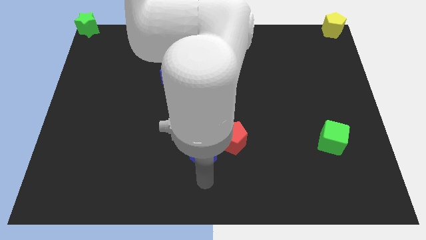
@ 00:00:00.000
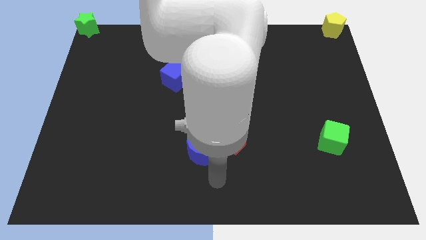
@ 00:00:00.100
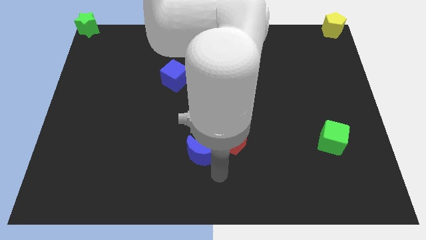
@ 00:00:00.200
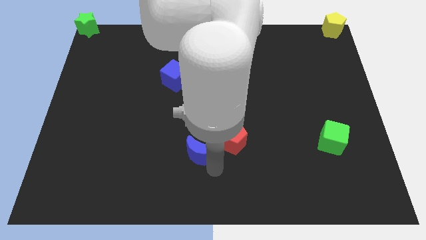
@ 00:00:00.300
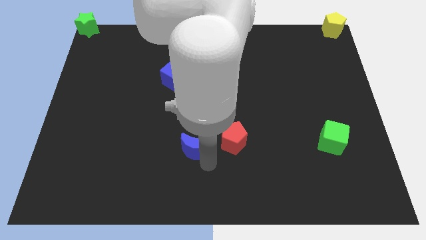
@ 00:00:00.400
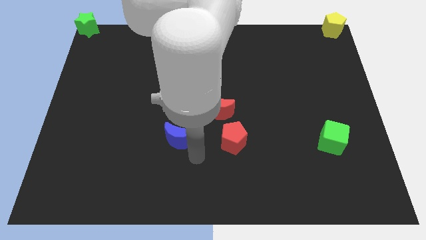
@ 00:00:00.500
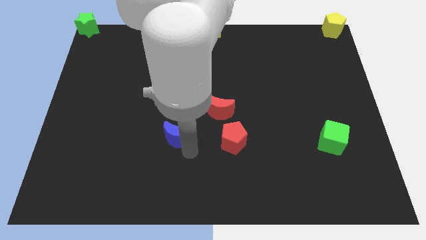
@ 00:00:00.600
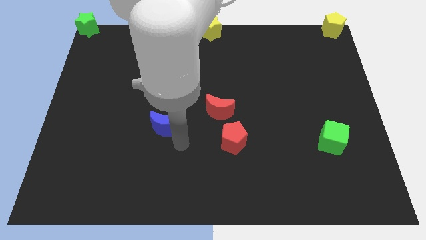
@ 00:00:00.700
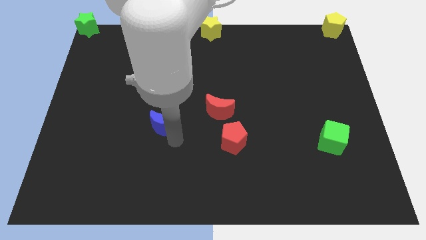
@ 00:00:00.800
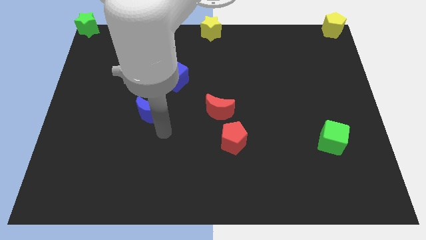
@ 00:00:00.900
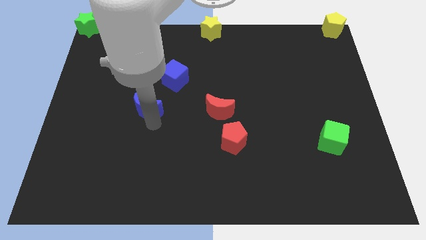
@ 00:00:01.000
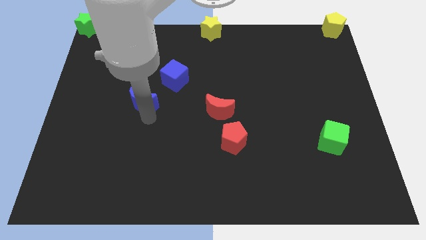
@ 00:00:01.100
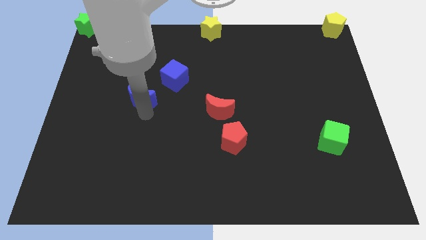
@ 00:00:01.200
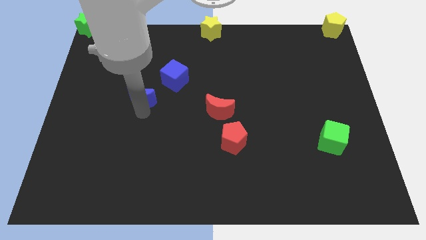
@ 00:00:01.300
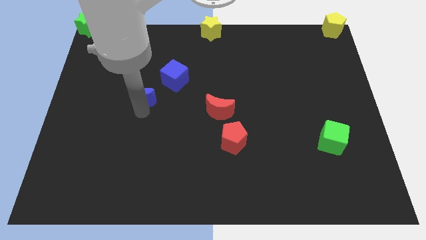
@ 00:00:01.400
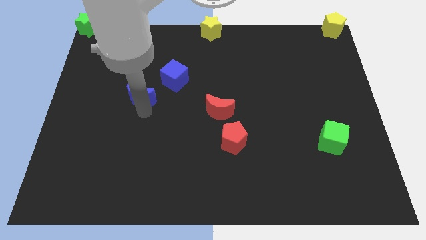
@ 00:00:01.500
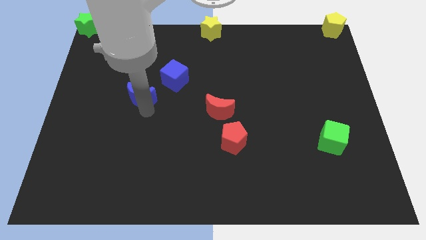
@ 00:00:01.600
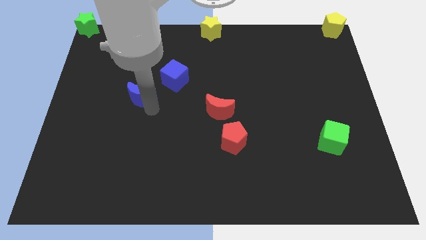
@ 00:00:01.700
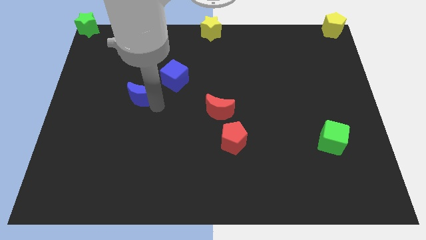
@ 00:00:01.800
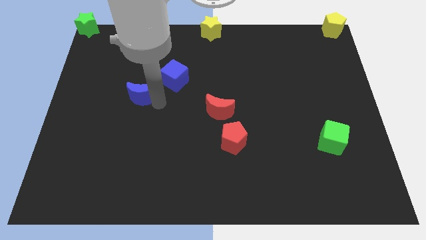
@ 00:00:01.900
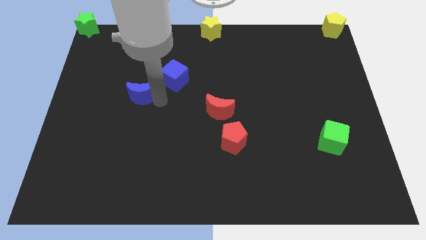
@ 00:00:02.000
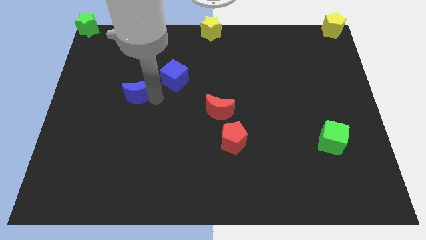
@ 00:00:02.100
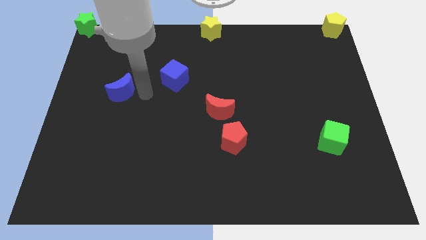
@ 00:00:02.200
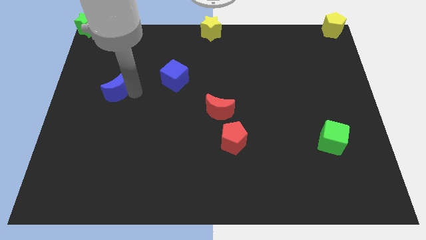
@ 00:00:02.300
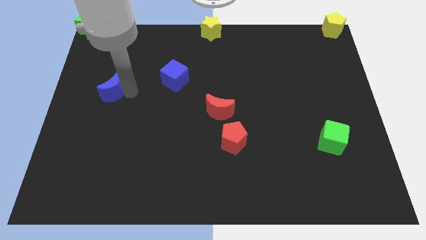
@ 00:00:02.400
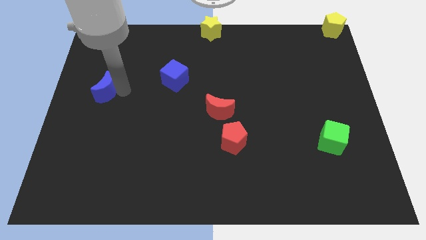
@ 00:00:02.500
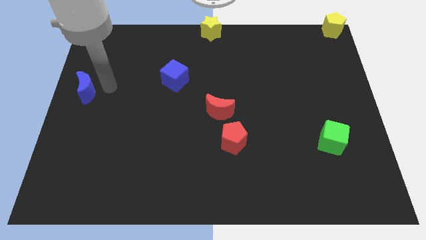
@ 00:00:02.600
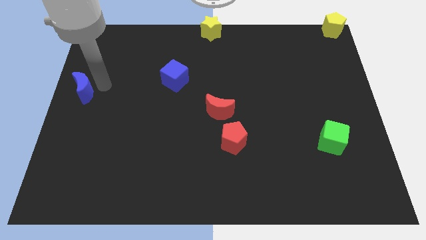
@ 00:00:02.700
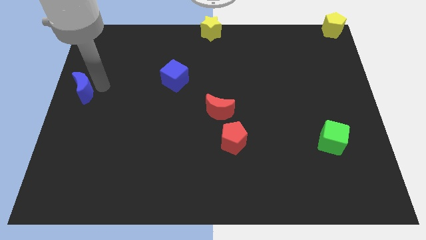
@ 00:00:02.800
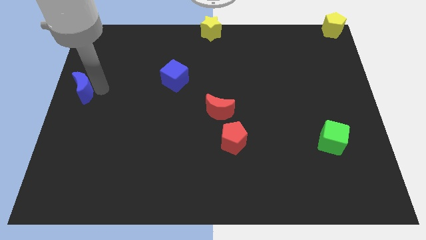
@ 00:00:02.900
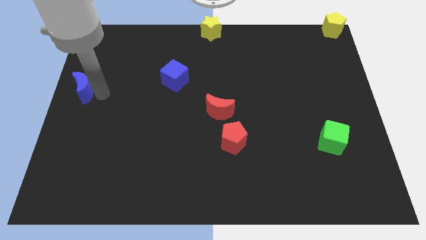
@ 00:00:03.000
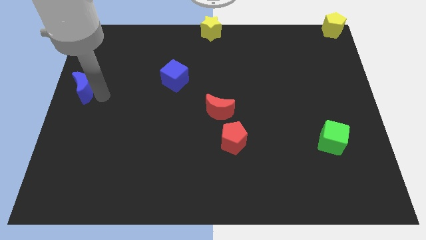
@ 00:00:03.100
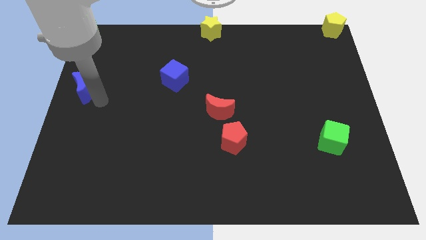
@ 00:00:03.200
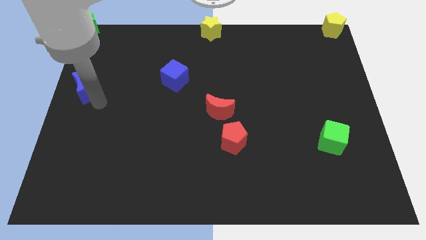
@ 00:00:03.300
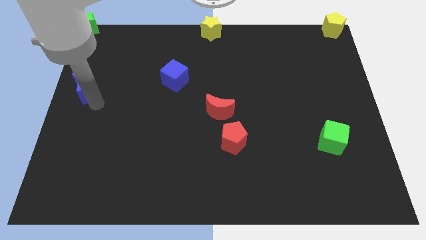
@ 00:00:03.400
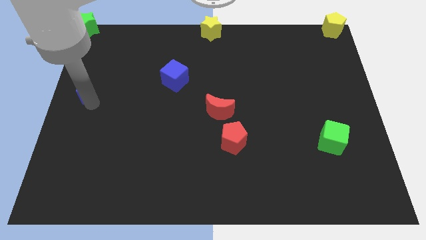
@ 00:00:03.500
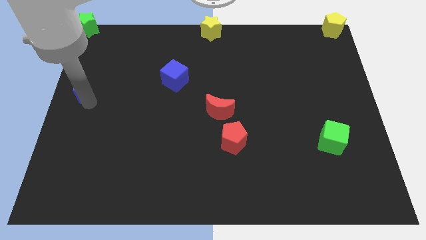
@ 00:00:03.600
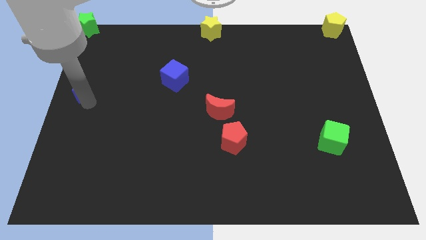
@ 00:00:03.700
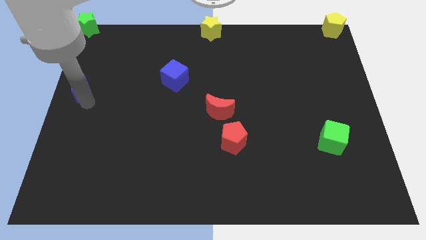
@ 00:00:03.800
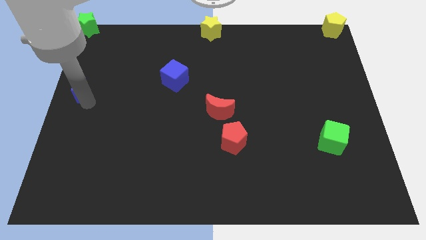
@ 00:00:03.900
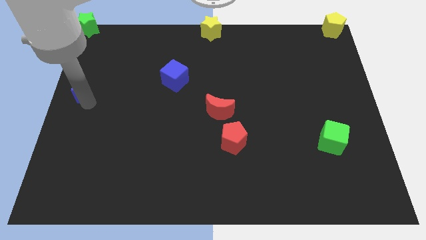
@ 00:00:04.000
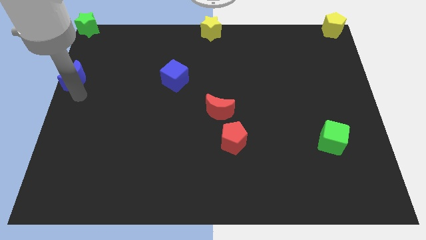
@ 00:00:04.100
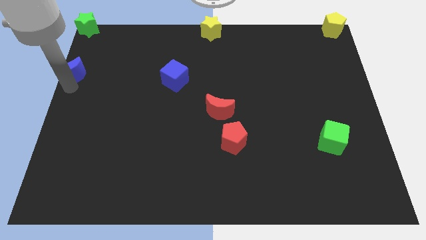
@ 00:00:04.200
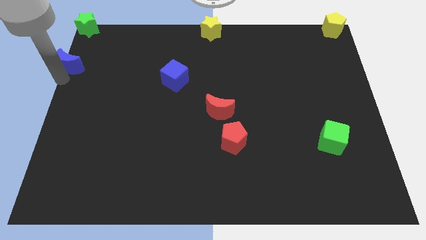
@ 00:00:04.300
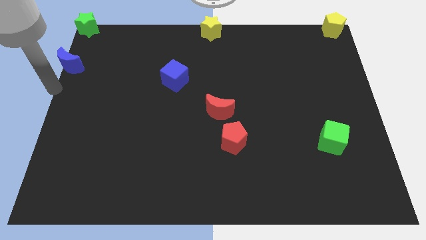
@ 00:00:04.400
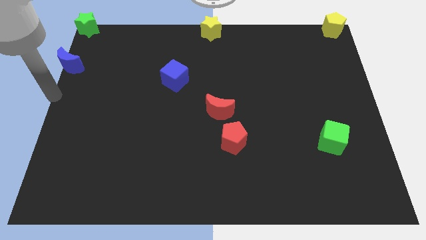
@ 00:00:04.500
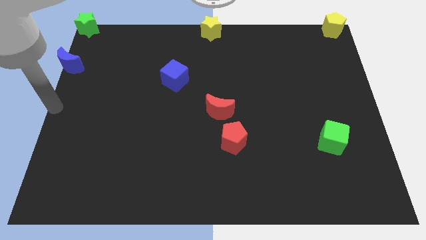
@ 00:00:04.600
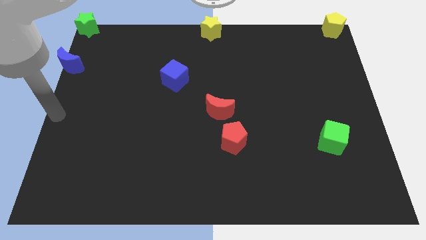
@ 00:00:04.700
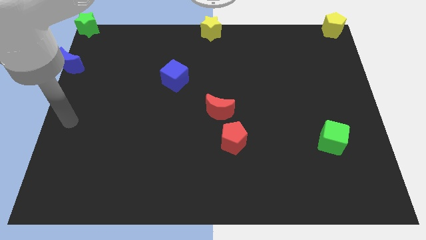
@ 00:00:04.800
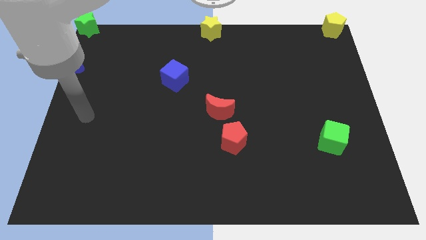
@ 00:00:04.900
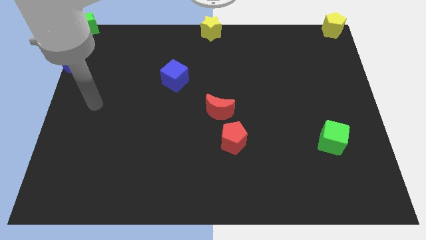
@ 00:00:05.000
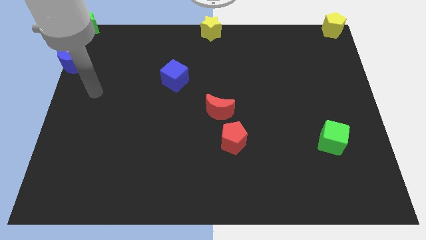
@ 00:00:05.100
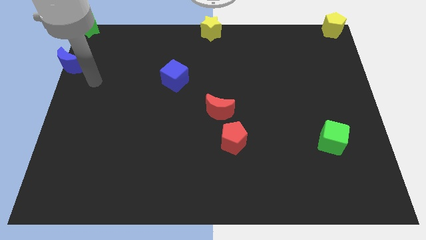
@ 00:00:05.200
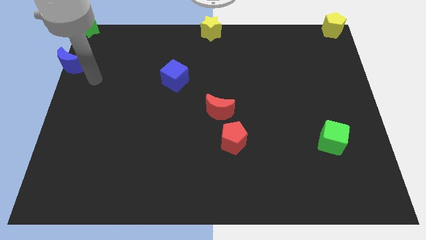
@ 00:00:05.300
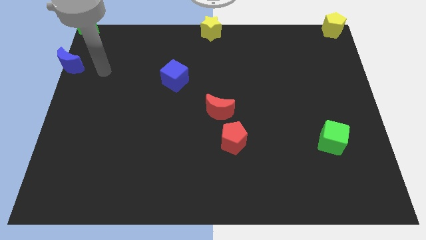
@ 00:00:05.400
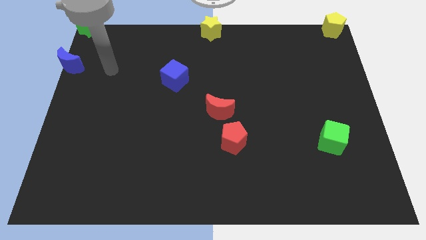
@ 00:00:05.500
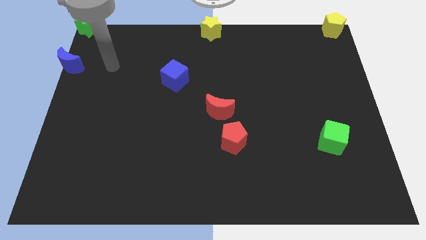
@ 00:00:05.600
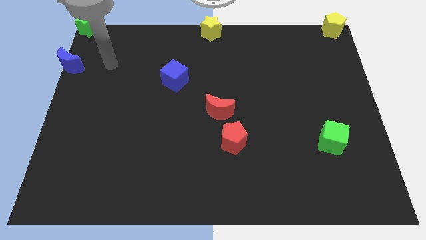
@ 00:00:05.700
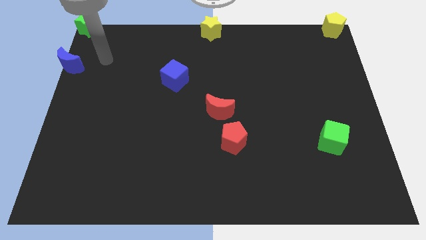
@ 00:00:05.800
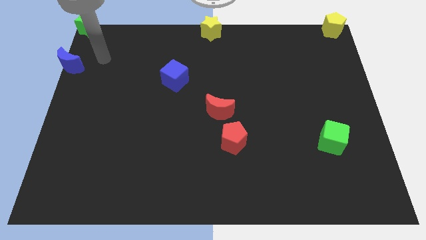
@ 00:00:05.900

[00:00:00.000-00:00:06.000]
place the blue moon below the green star

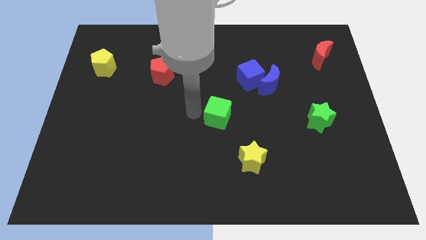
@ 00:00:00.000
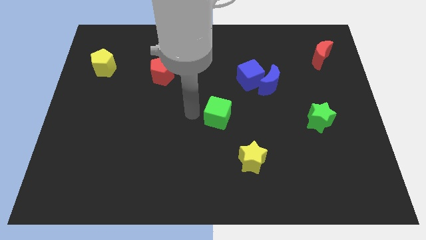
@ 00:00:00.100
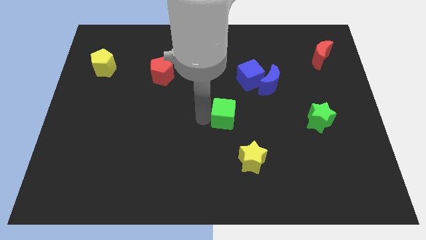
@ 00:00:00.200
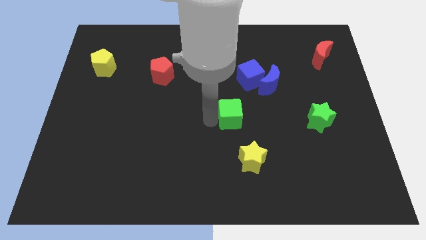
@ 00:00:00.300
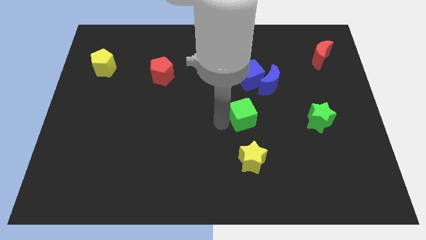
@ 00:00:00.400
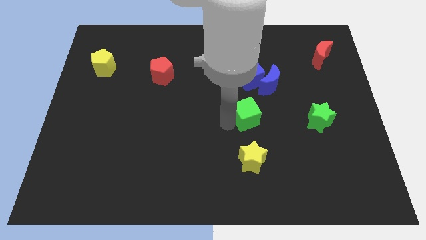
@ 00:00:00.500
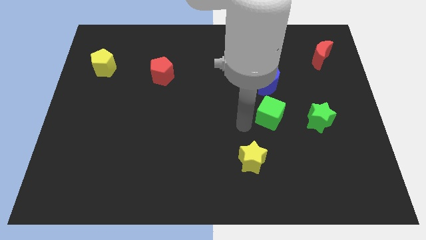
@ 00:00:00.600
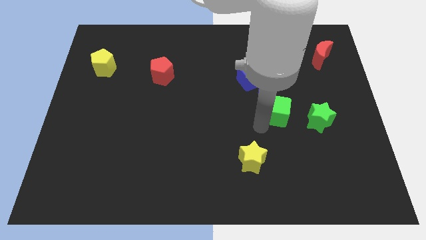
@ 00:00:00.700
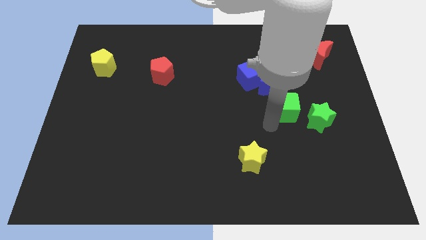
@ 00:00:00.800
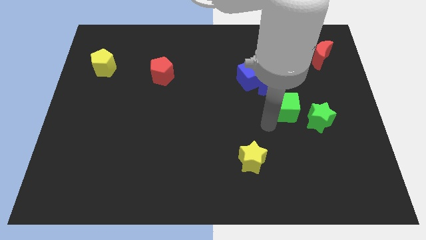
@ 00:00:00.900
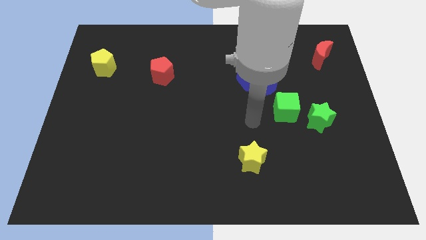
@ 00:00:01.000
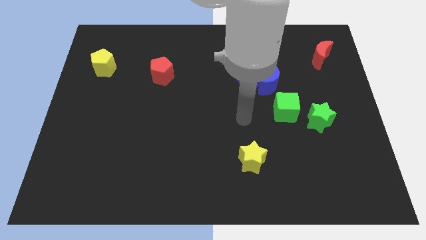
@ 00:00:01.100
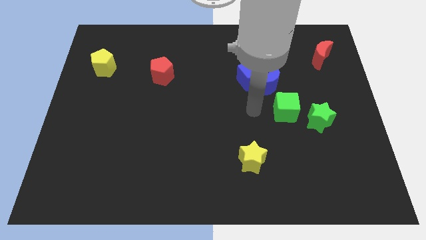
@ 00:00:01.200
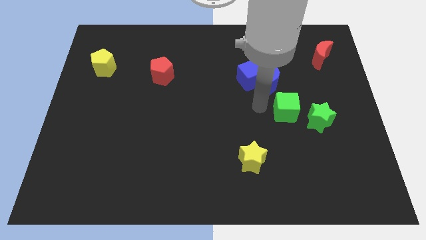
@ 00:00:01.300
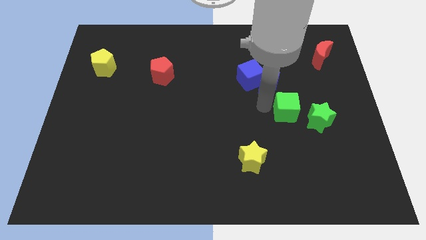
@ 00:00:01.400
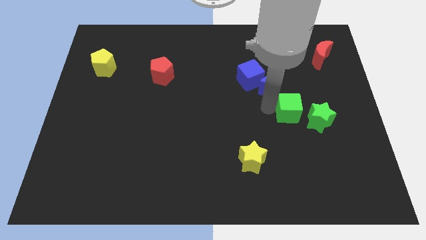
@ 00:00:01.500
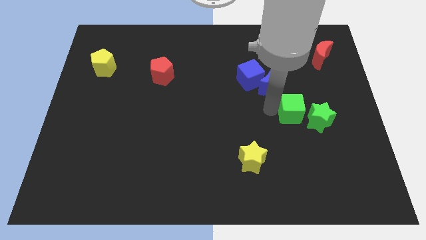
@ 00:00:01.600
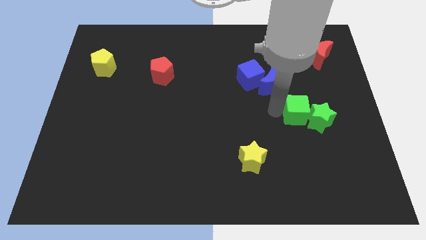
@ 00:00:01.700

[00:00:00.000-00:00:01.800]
push the green cube into the green star

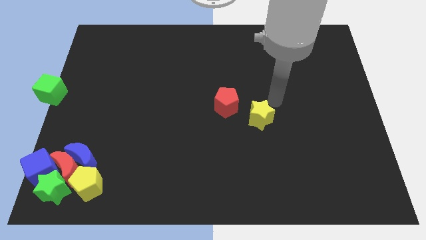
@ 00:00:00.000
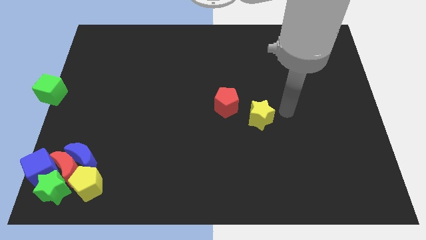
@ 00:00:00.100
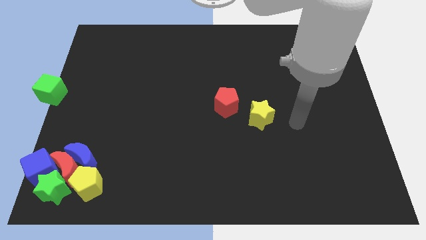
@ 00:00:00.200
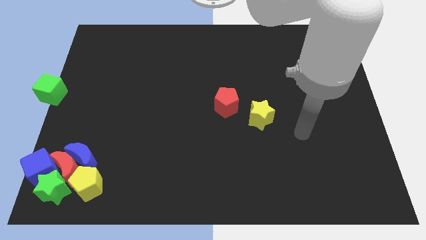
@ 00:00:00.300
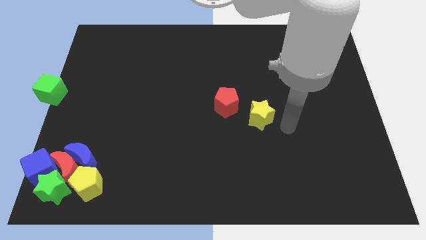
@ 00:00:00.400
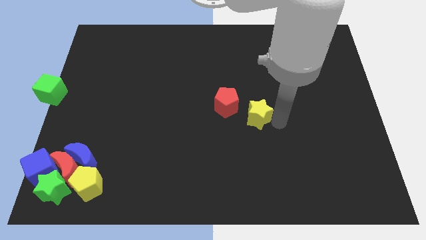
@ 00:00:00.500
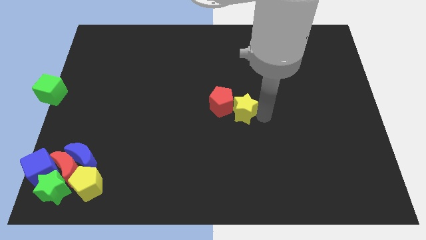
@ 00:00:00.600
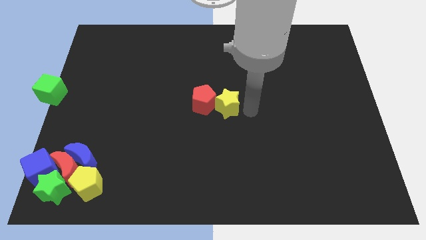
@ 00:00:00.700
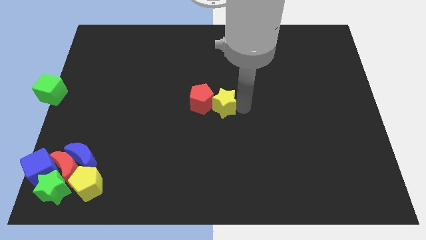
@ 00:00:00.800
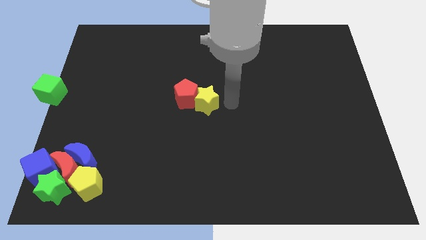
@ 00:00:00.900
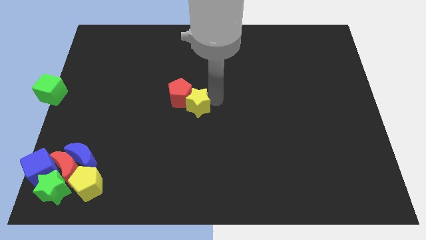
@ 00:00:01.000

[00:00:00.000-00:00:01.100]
push the yellow star into the red pentagon
